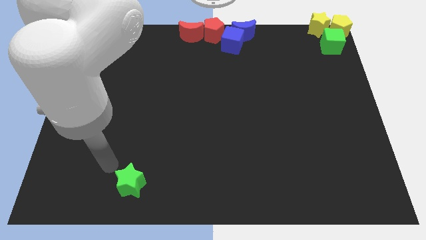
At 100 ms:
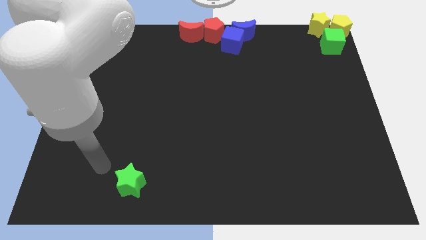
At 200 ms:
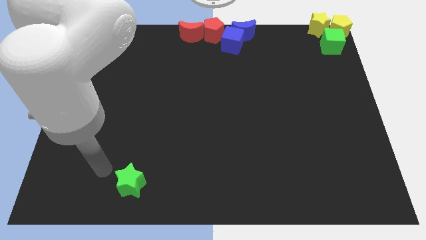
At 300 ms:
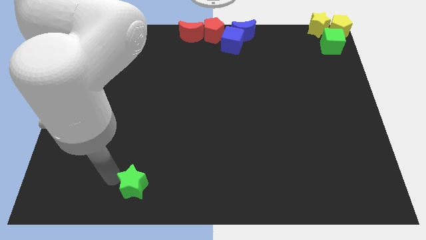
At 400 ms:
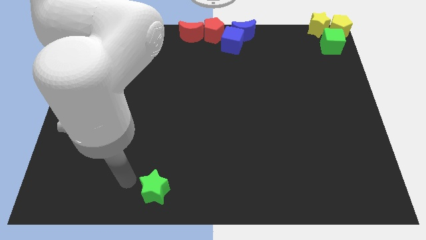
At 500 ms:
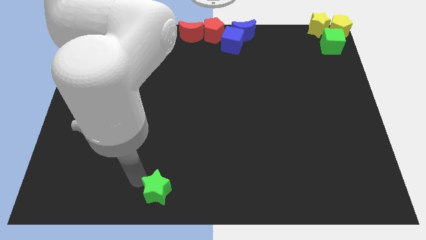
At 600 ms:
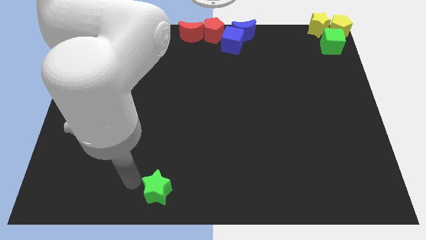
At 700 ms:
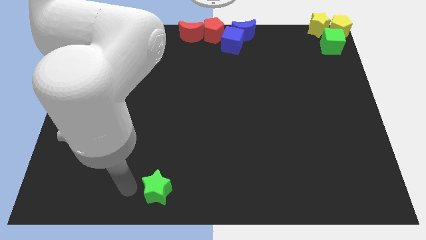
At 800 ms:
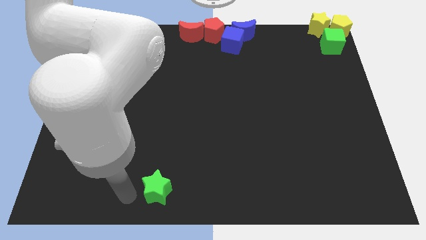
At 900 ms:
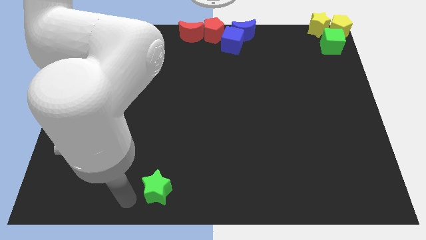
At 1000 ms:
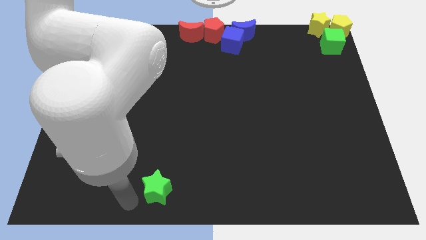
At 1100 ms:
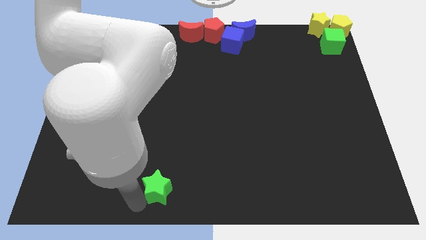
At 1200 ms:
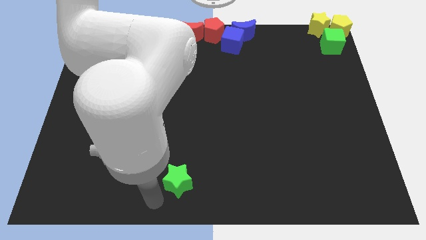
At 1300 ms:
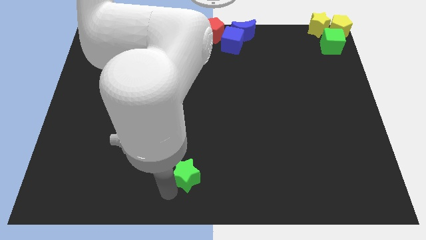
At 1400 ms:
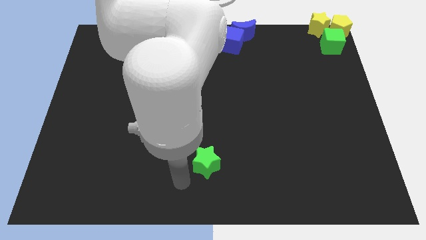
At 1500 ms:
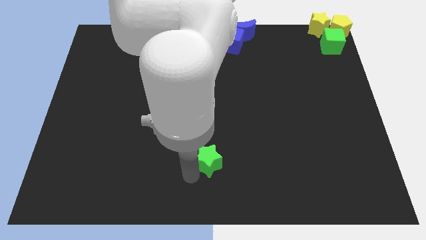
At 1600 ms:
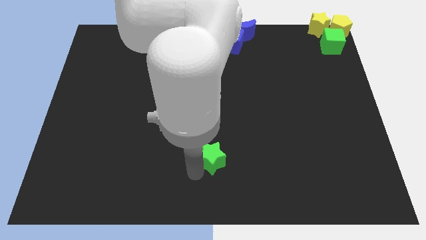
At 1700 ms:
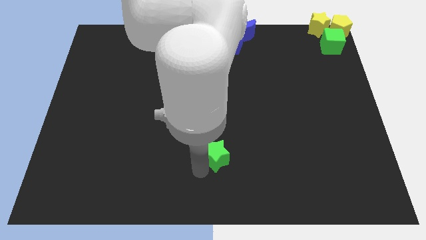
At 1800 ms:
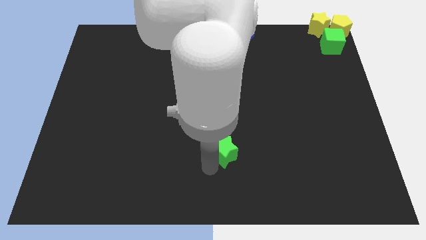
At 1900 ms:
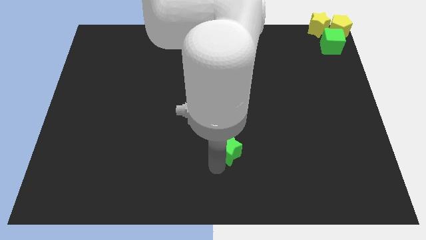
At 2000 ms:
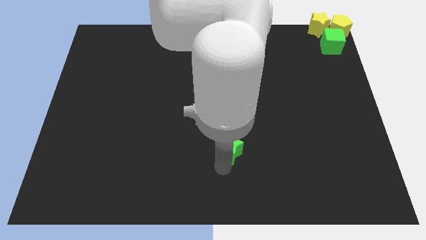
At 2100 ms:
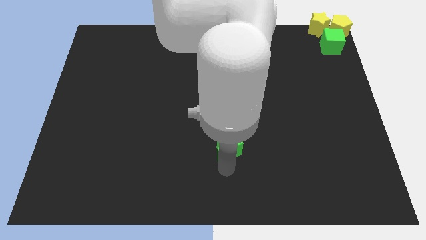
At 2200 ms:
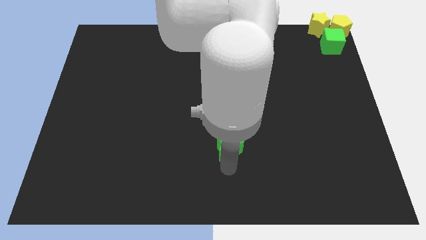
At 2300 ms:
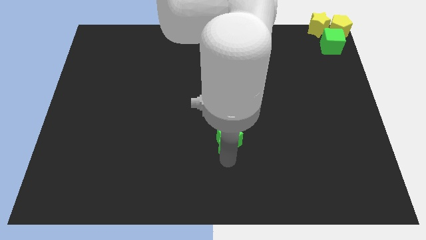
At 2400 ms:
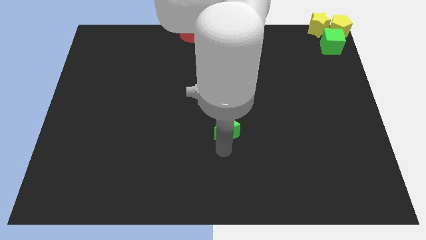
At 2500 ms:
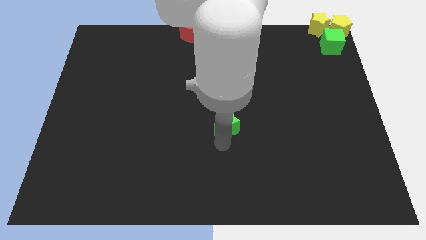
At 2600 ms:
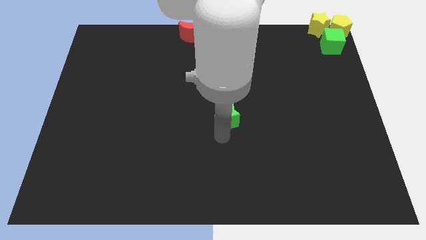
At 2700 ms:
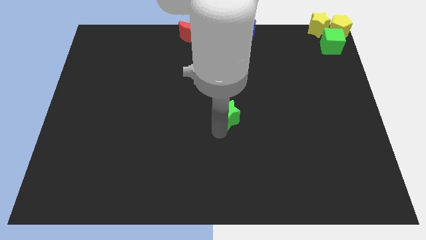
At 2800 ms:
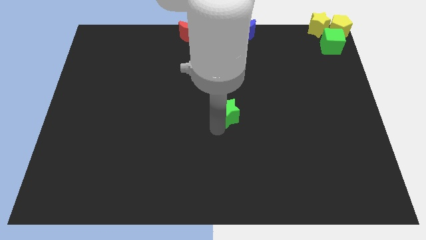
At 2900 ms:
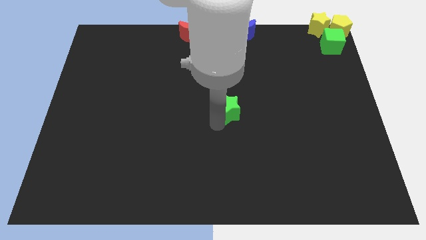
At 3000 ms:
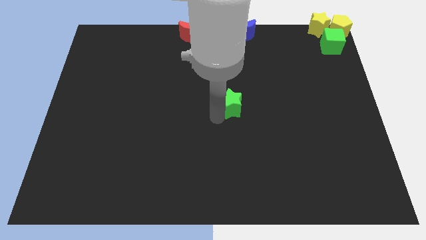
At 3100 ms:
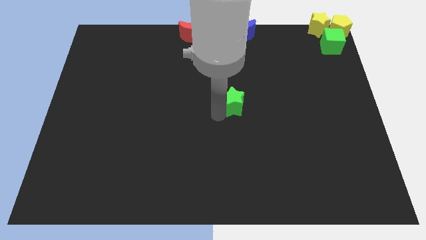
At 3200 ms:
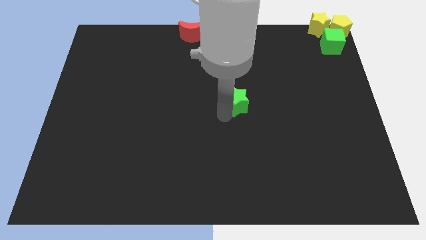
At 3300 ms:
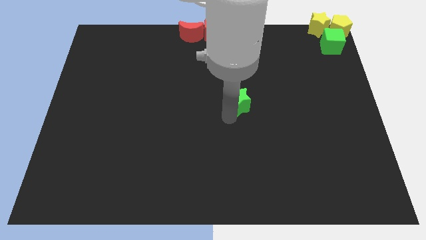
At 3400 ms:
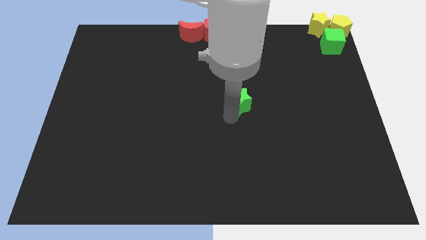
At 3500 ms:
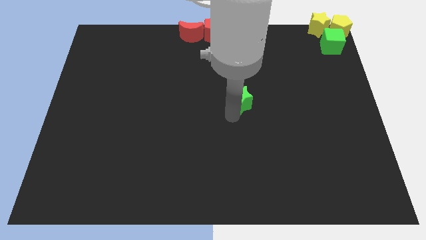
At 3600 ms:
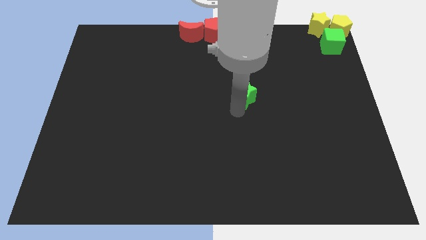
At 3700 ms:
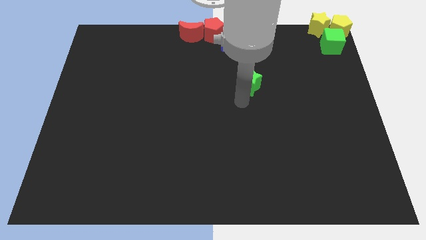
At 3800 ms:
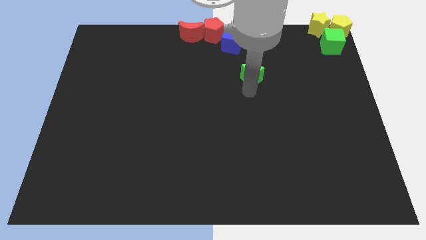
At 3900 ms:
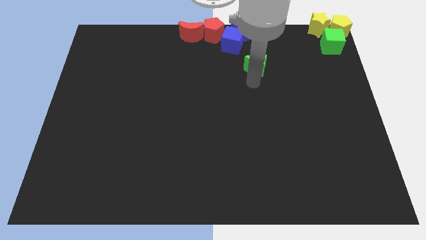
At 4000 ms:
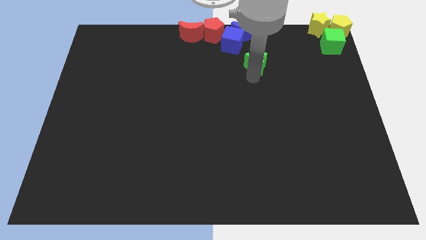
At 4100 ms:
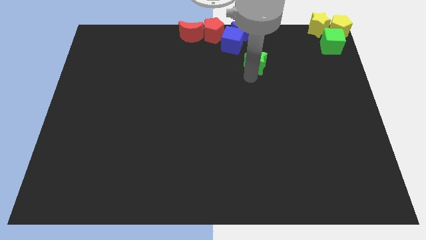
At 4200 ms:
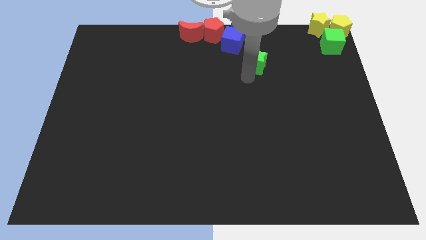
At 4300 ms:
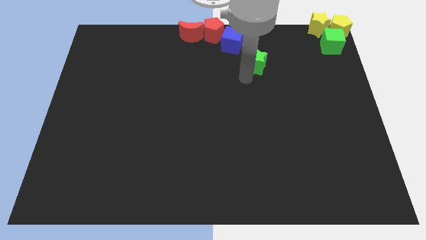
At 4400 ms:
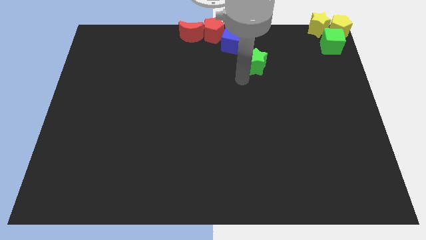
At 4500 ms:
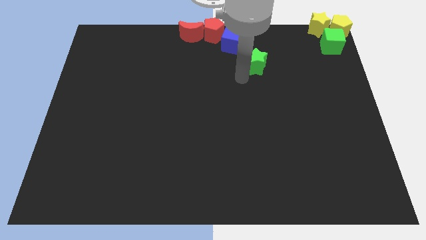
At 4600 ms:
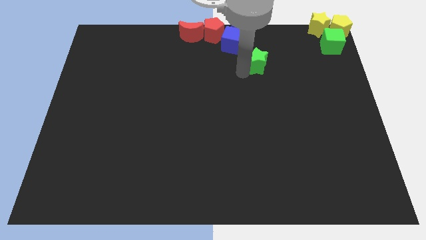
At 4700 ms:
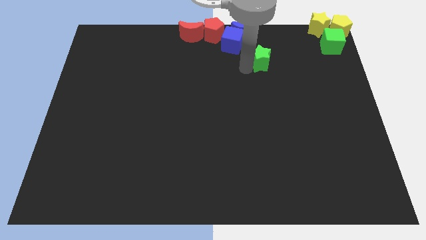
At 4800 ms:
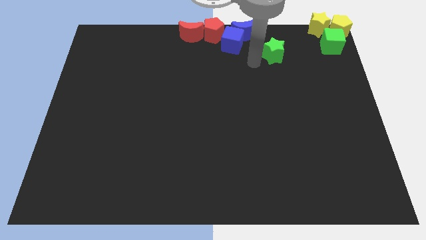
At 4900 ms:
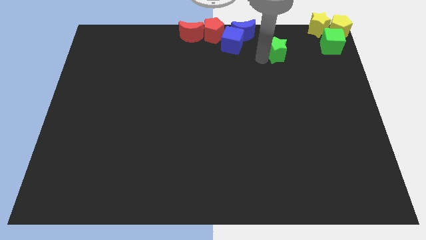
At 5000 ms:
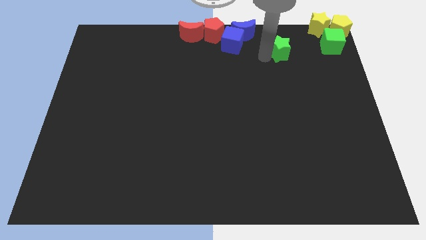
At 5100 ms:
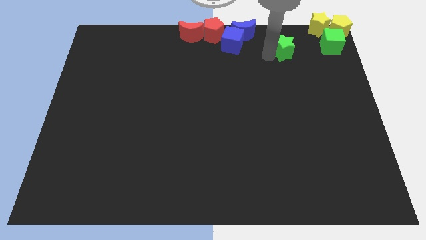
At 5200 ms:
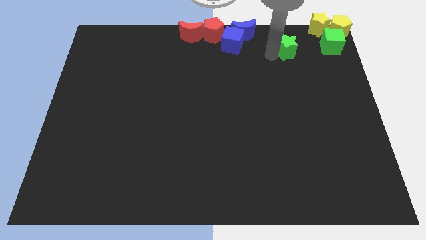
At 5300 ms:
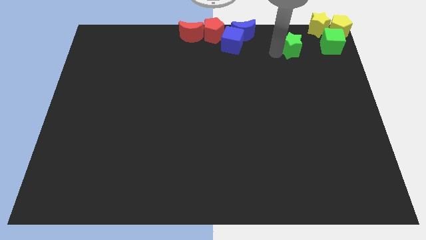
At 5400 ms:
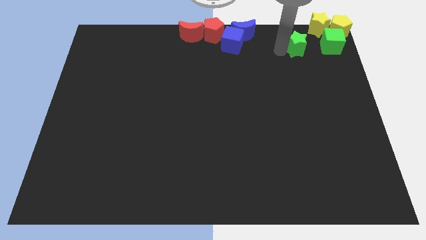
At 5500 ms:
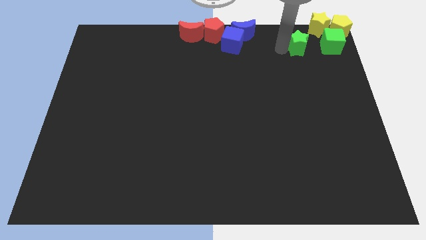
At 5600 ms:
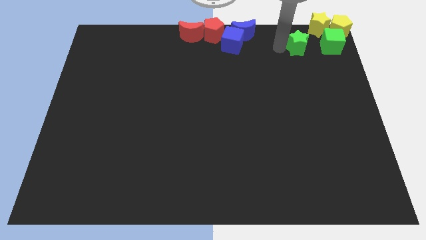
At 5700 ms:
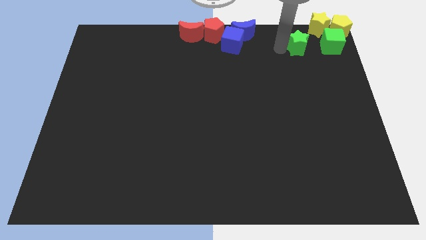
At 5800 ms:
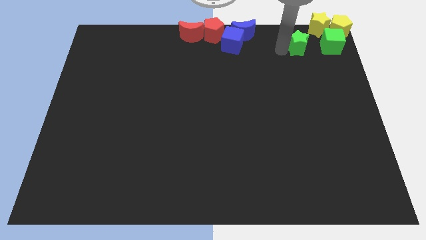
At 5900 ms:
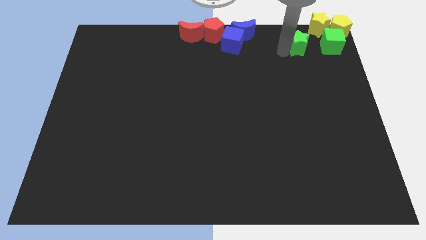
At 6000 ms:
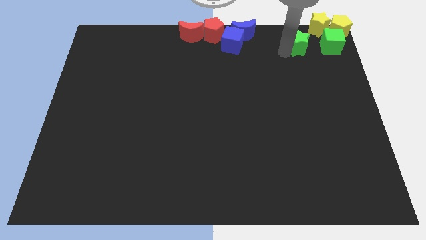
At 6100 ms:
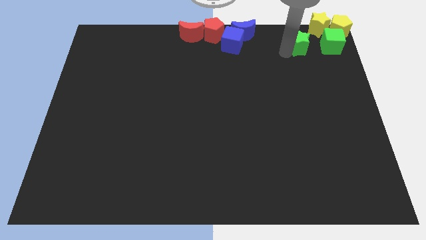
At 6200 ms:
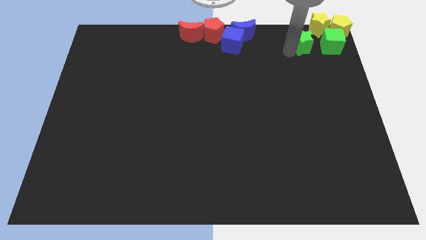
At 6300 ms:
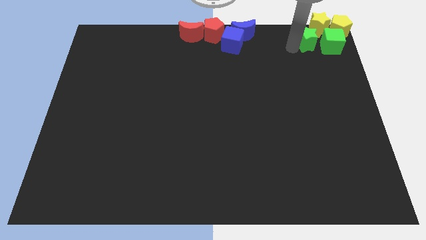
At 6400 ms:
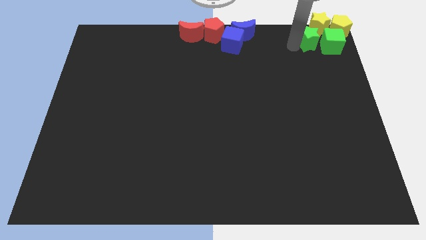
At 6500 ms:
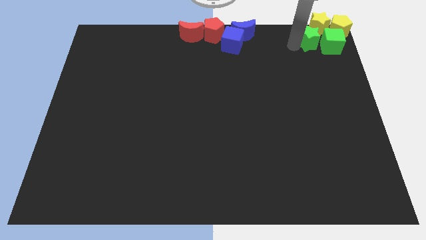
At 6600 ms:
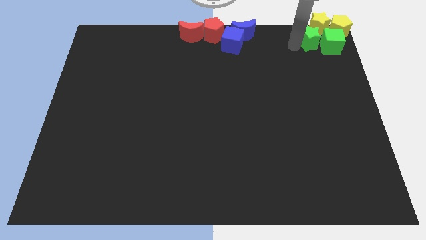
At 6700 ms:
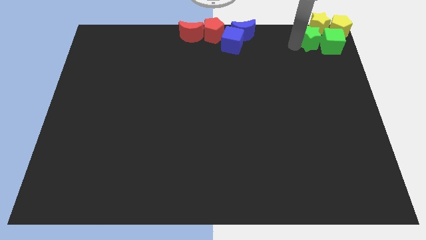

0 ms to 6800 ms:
place green star left to green cube

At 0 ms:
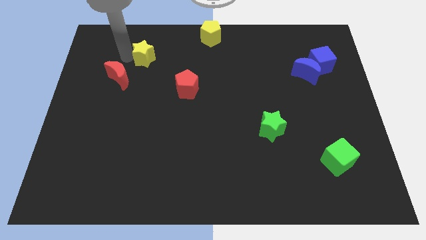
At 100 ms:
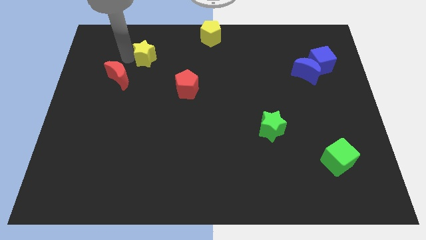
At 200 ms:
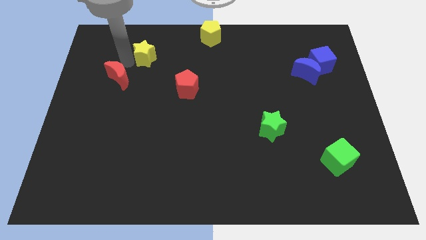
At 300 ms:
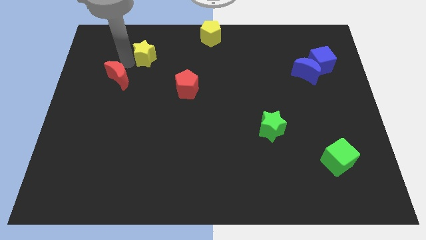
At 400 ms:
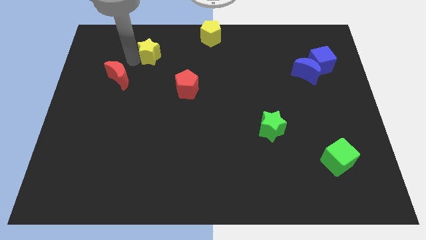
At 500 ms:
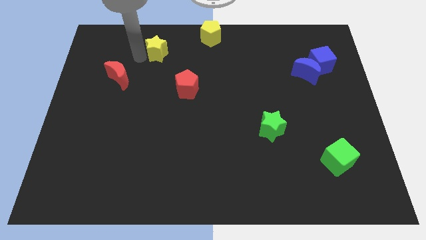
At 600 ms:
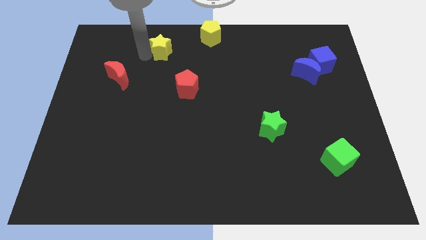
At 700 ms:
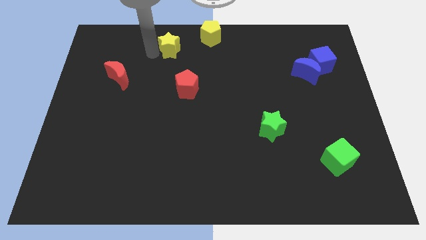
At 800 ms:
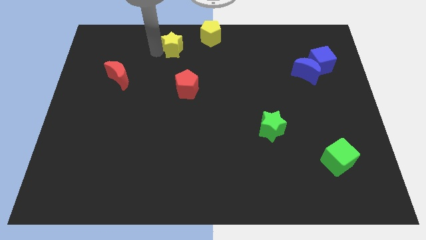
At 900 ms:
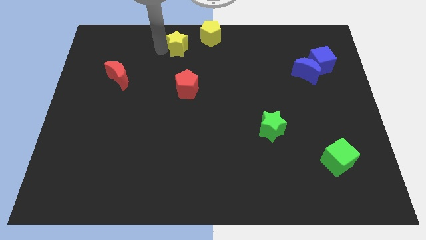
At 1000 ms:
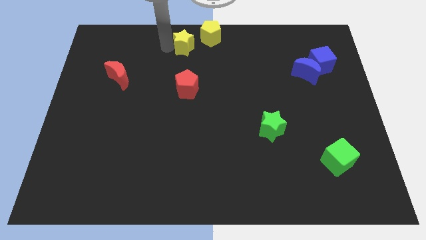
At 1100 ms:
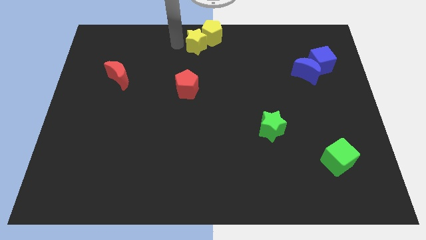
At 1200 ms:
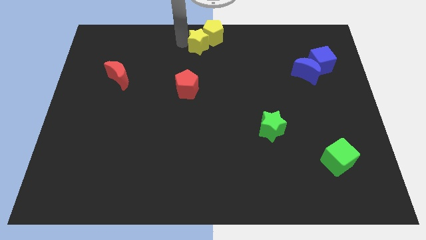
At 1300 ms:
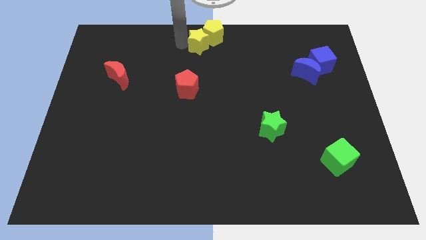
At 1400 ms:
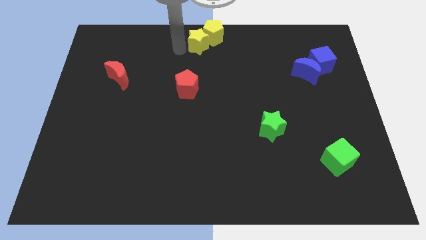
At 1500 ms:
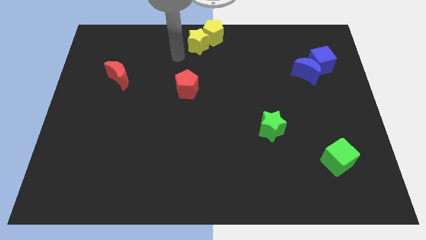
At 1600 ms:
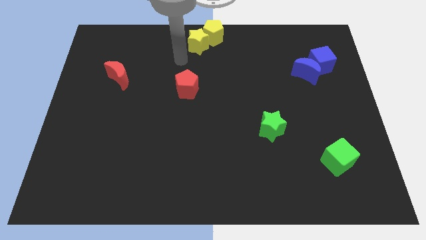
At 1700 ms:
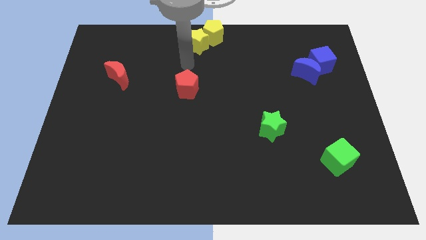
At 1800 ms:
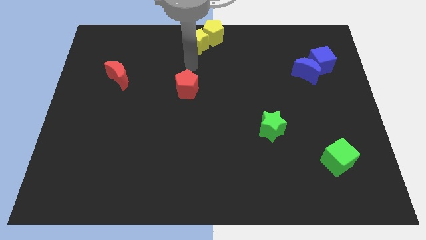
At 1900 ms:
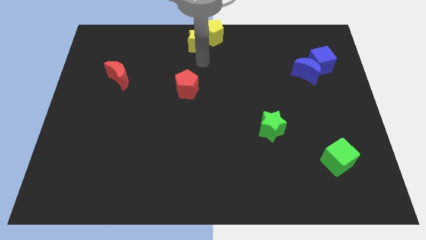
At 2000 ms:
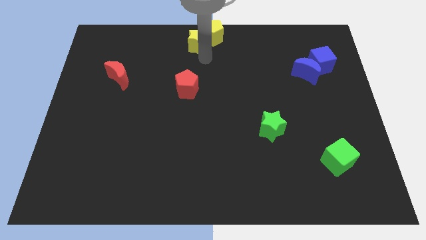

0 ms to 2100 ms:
push yellow star into yellow pentagon
